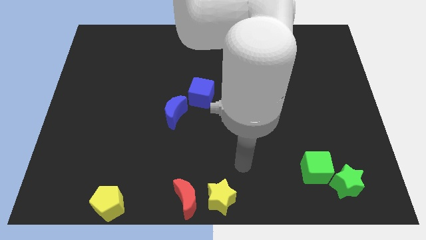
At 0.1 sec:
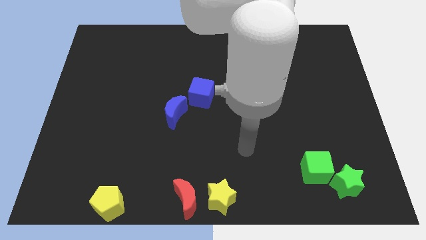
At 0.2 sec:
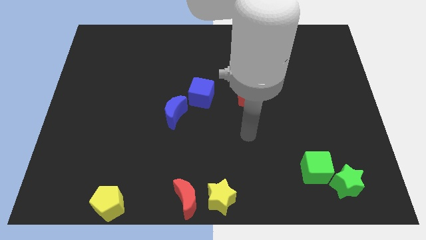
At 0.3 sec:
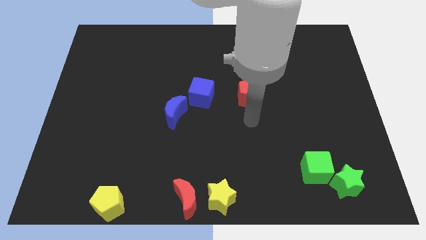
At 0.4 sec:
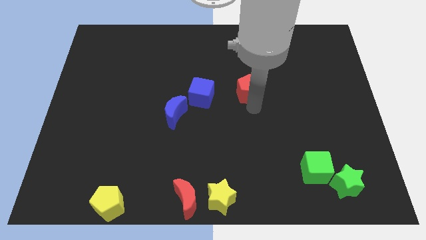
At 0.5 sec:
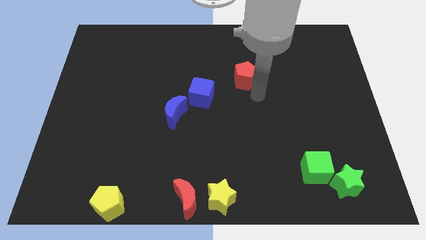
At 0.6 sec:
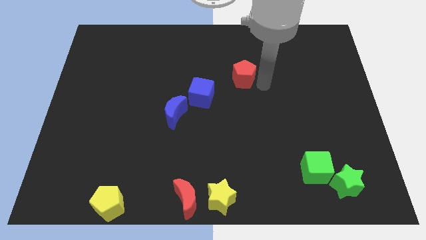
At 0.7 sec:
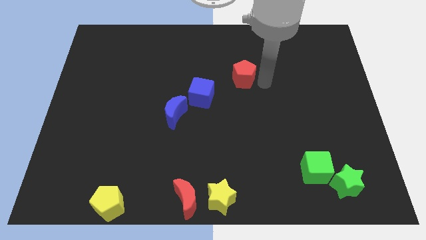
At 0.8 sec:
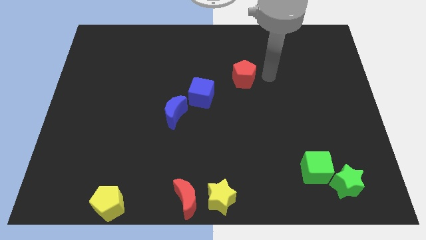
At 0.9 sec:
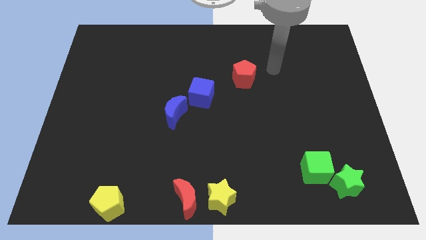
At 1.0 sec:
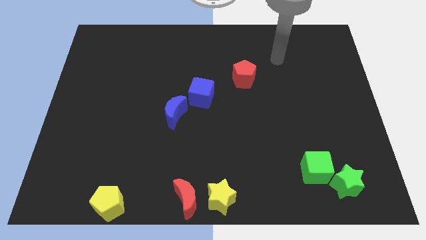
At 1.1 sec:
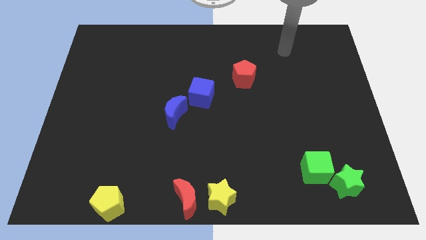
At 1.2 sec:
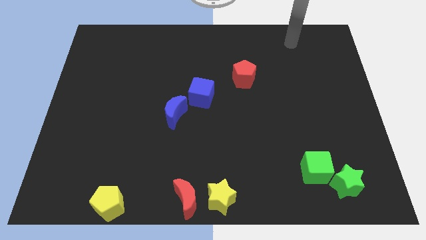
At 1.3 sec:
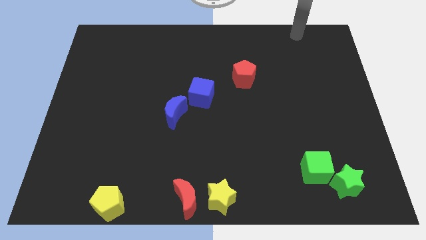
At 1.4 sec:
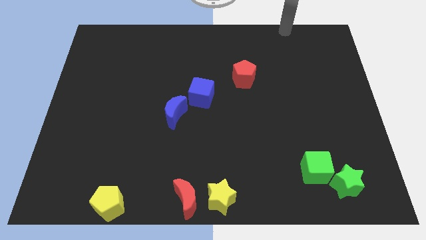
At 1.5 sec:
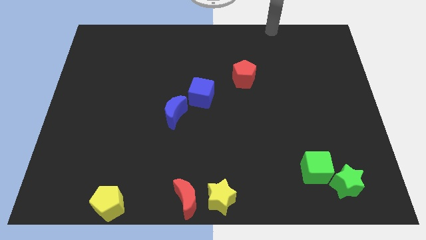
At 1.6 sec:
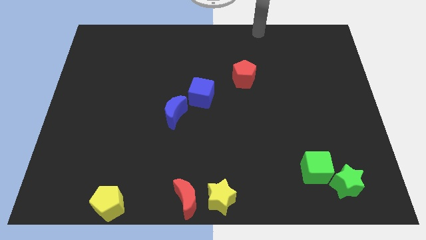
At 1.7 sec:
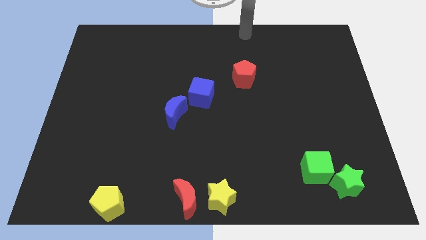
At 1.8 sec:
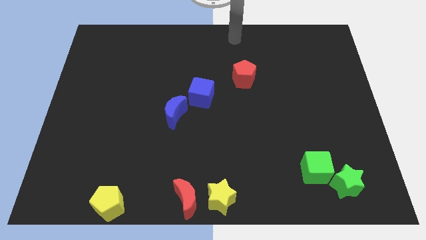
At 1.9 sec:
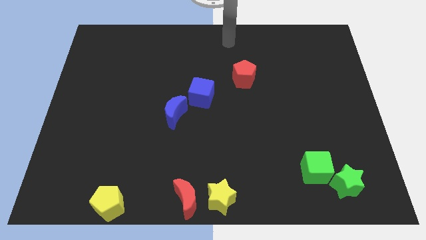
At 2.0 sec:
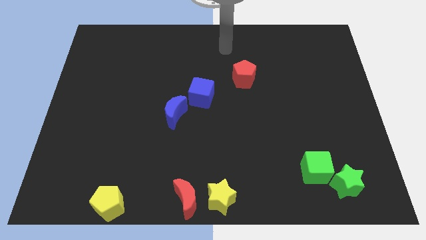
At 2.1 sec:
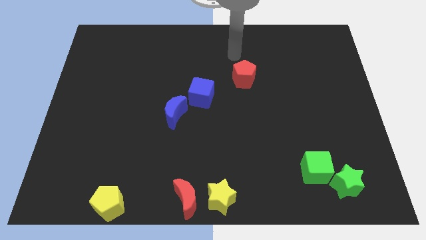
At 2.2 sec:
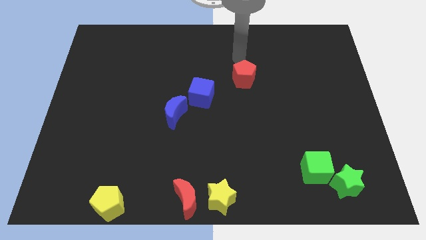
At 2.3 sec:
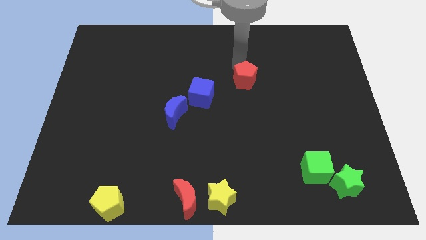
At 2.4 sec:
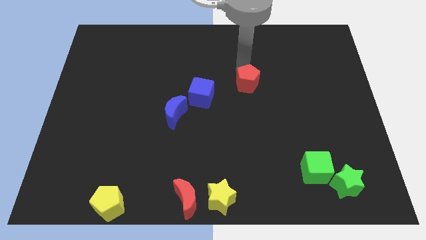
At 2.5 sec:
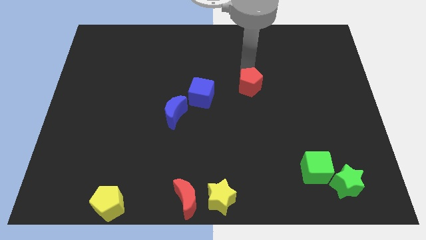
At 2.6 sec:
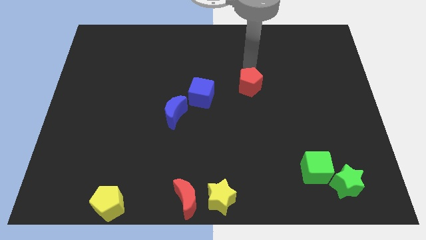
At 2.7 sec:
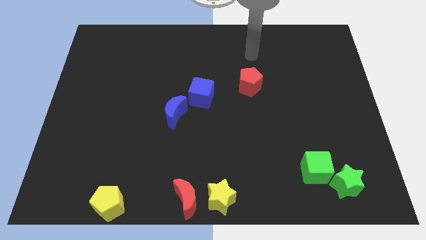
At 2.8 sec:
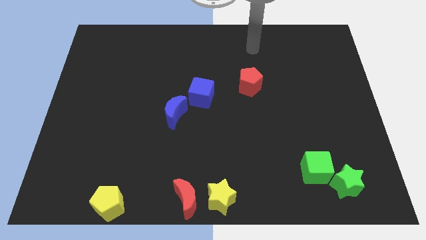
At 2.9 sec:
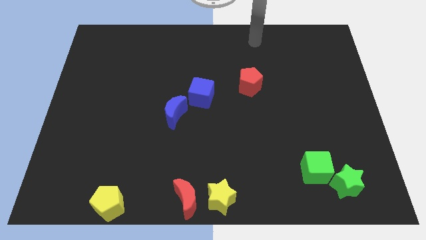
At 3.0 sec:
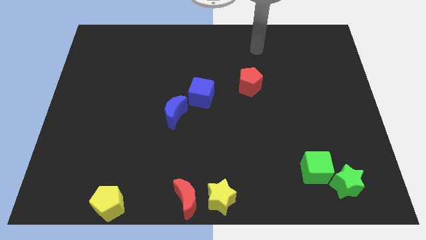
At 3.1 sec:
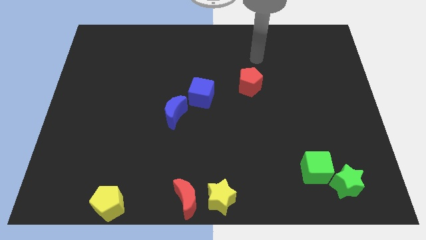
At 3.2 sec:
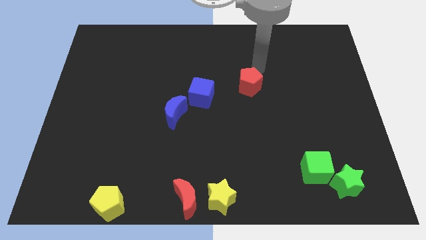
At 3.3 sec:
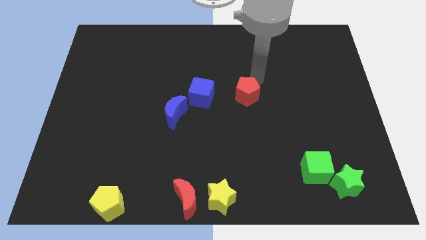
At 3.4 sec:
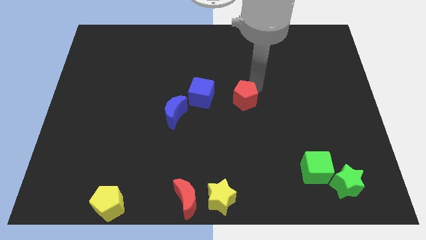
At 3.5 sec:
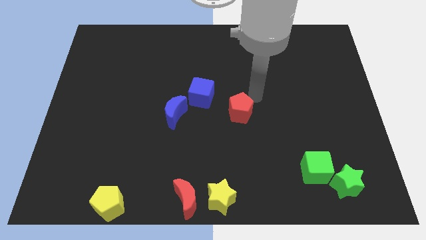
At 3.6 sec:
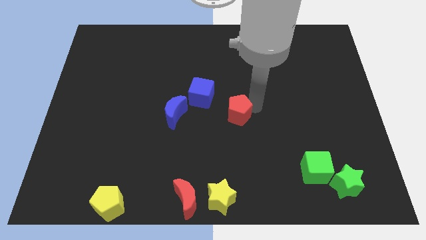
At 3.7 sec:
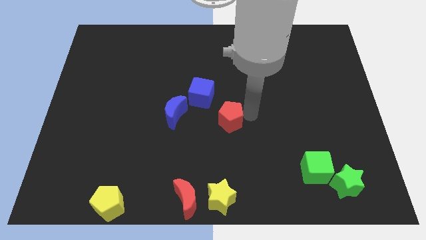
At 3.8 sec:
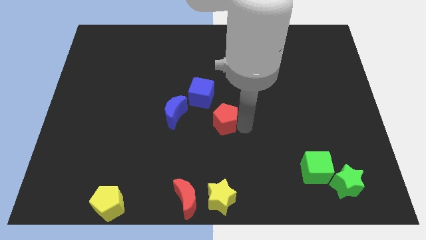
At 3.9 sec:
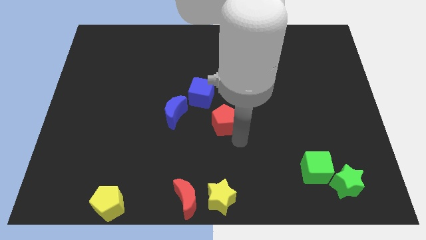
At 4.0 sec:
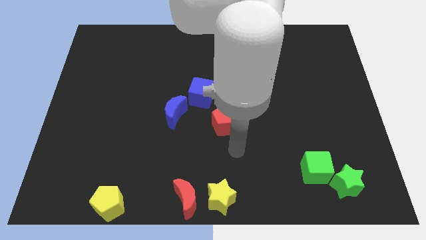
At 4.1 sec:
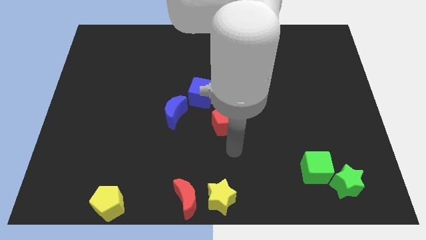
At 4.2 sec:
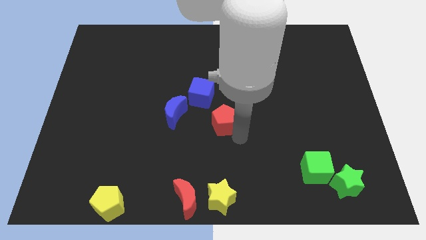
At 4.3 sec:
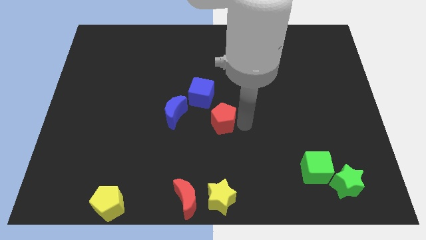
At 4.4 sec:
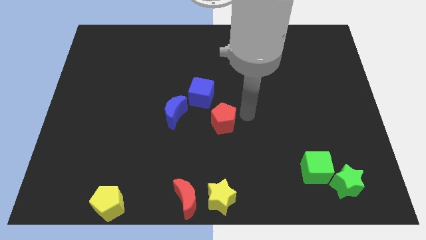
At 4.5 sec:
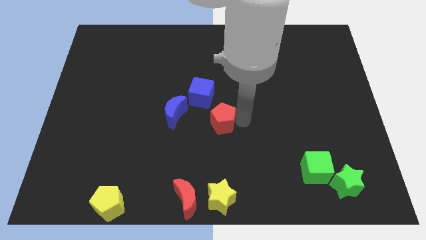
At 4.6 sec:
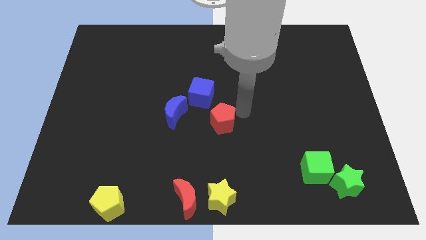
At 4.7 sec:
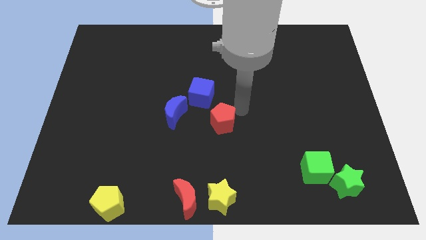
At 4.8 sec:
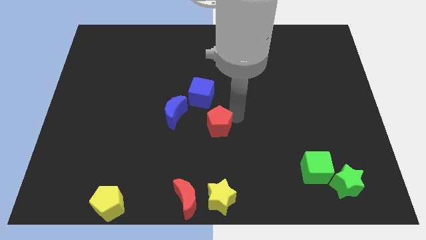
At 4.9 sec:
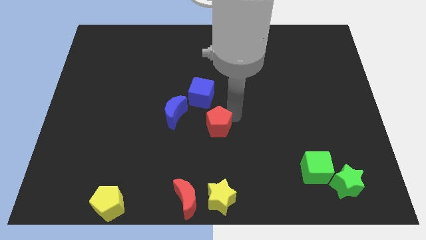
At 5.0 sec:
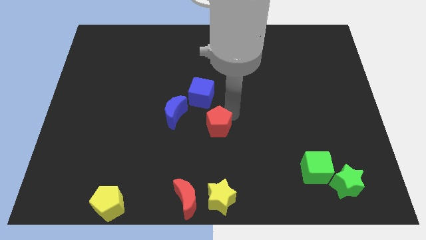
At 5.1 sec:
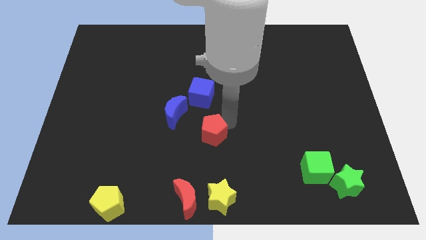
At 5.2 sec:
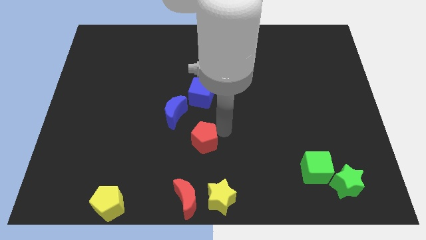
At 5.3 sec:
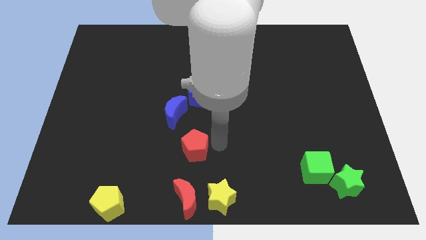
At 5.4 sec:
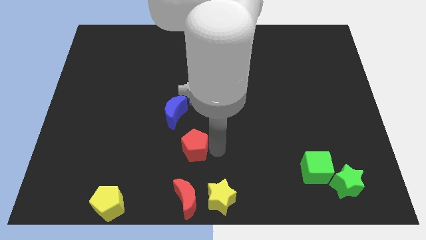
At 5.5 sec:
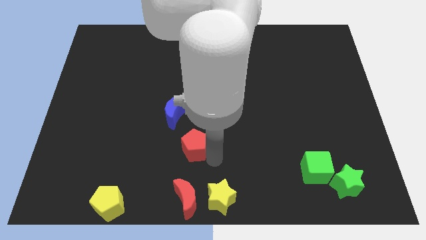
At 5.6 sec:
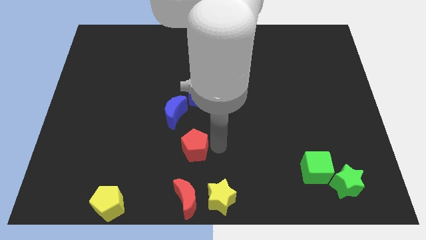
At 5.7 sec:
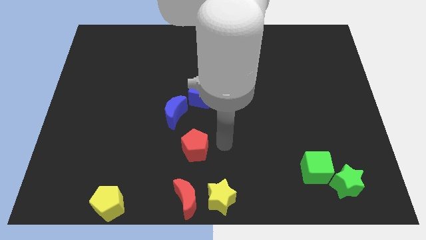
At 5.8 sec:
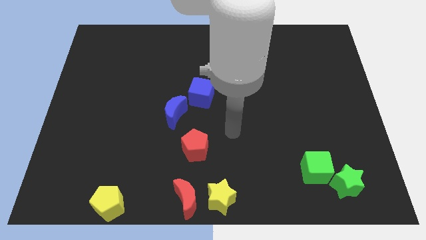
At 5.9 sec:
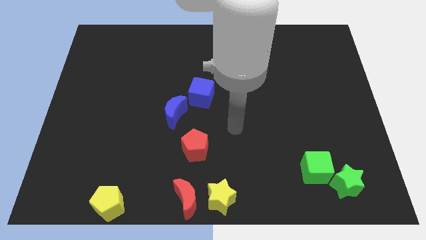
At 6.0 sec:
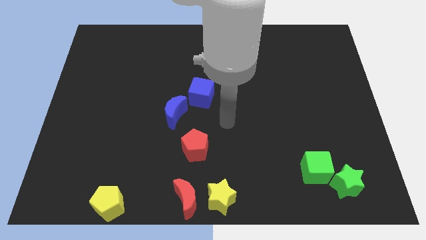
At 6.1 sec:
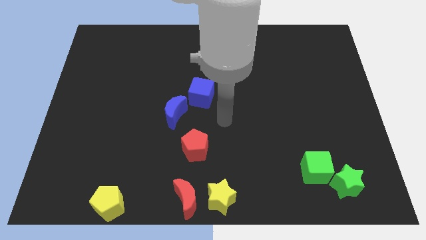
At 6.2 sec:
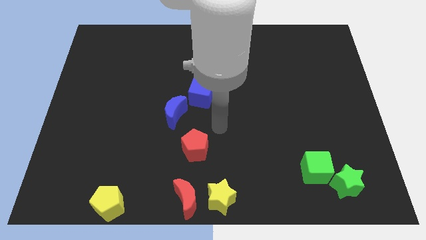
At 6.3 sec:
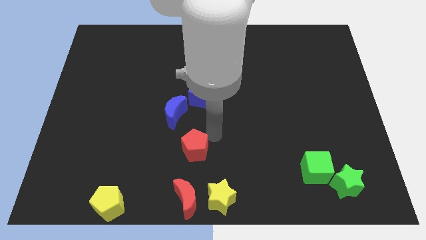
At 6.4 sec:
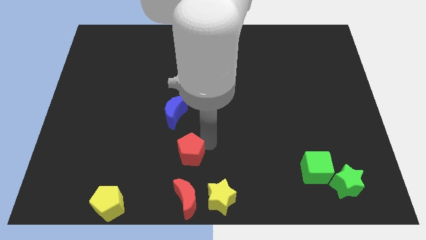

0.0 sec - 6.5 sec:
put the red pentagon vertically above the red moon

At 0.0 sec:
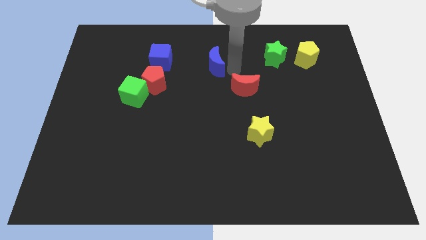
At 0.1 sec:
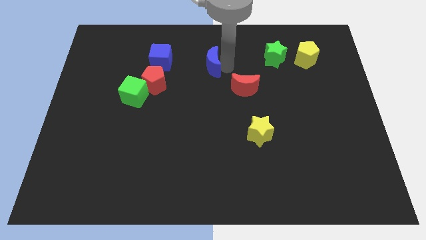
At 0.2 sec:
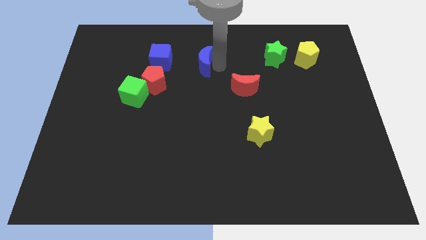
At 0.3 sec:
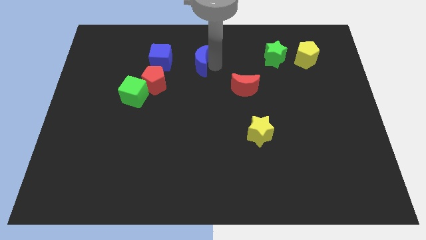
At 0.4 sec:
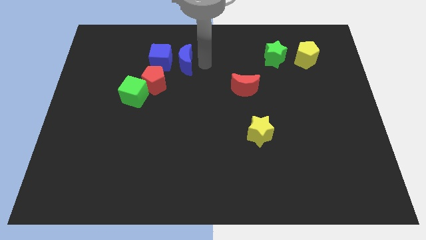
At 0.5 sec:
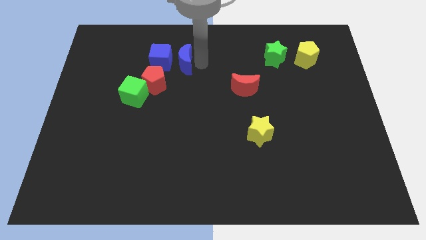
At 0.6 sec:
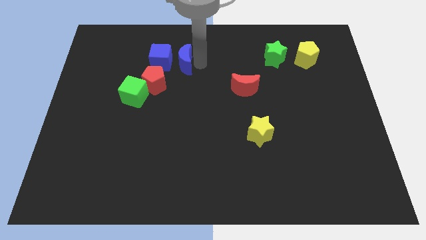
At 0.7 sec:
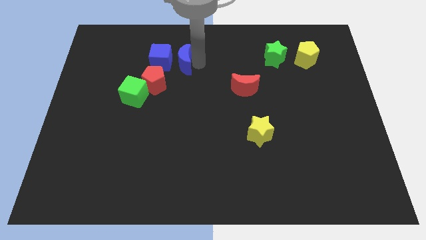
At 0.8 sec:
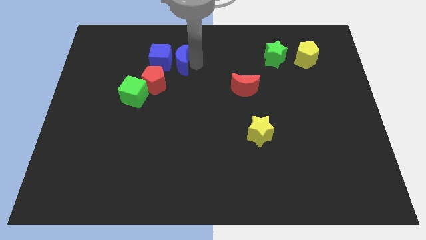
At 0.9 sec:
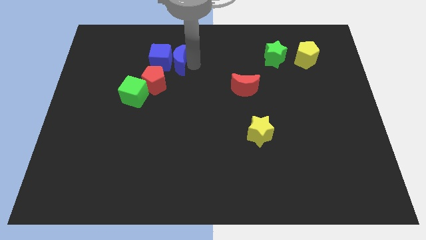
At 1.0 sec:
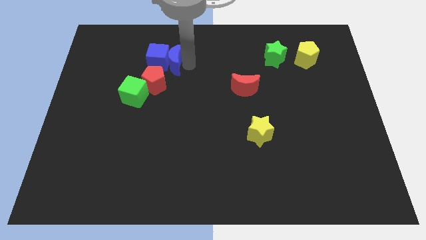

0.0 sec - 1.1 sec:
push blue crescent near the blue cube

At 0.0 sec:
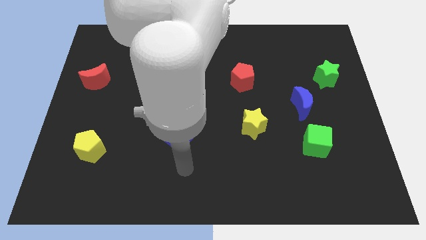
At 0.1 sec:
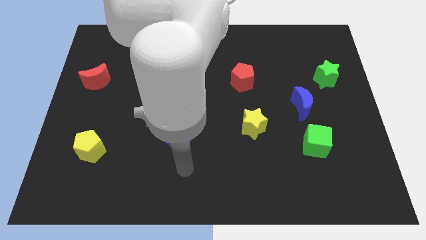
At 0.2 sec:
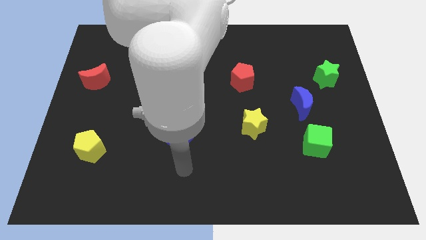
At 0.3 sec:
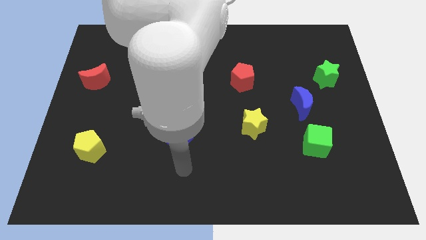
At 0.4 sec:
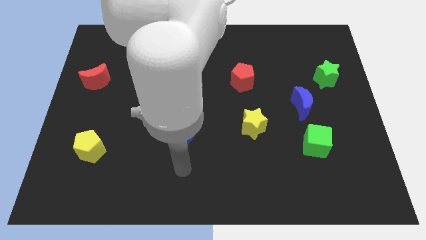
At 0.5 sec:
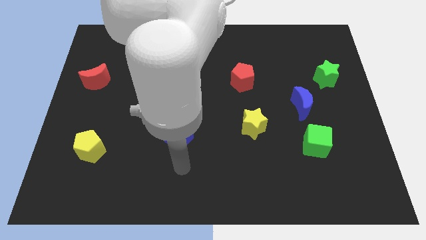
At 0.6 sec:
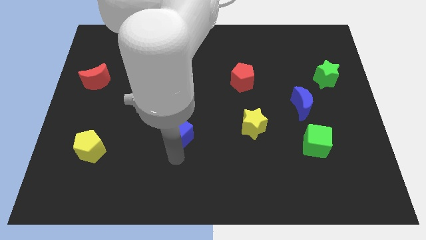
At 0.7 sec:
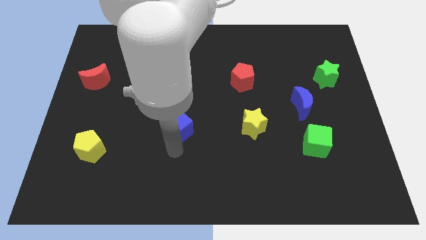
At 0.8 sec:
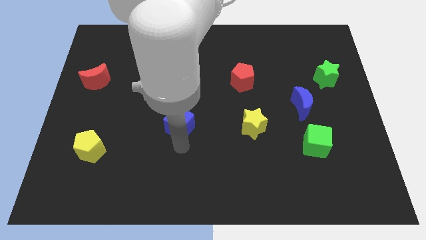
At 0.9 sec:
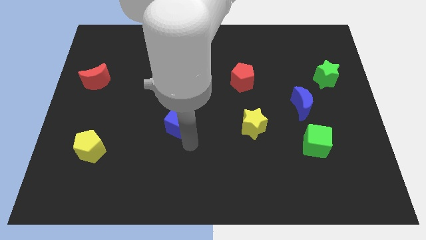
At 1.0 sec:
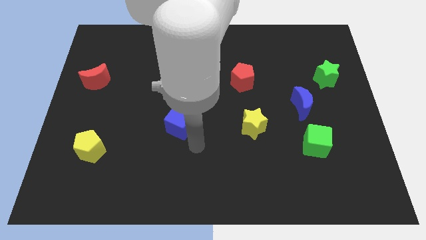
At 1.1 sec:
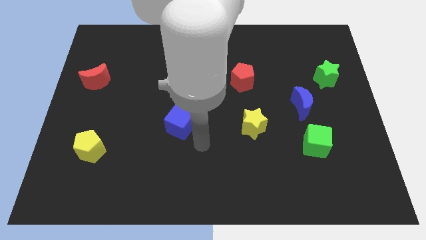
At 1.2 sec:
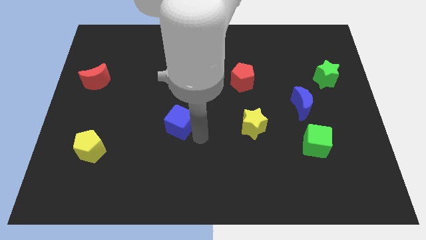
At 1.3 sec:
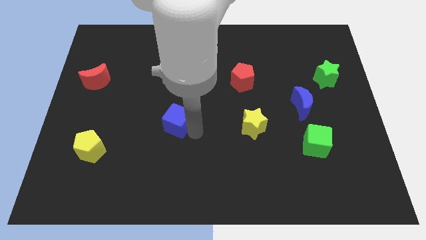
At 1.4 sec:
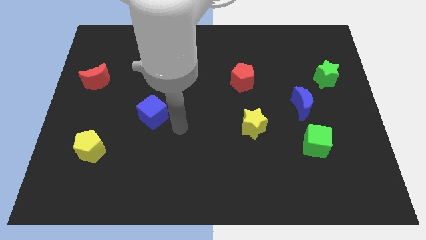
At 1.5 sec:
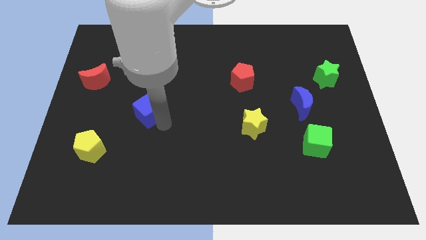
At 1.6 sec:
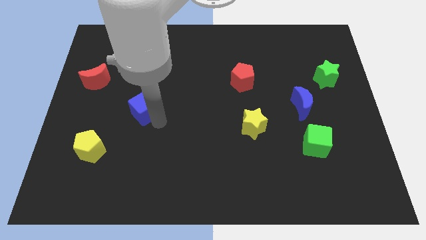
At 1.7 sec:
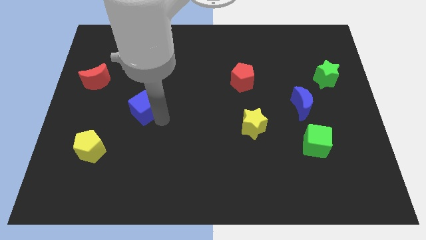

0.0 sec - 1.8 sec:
push the blue cube to the top right of the board
